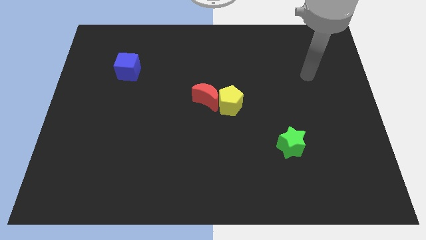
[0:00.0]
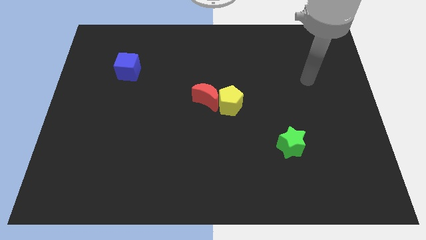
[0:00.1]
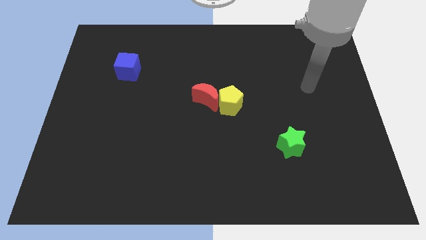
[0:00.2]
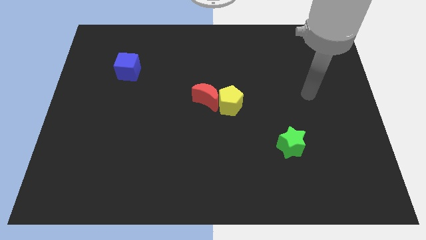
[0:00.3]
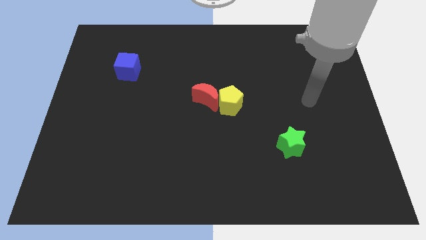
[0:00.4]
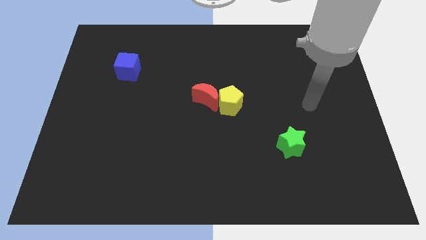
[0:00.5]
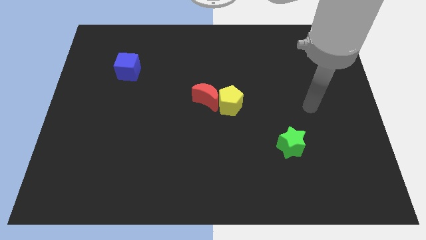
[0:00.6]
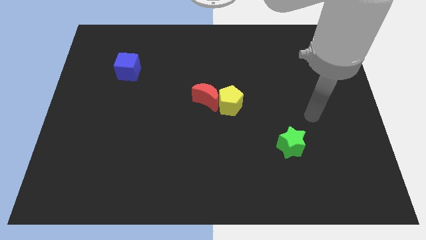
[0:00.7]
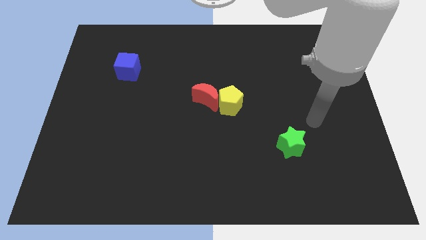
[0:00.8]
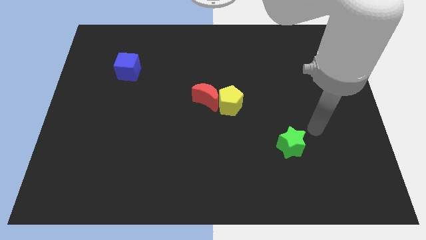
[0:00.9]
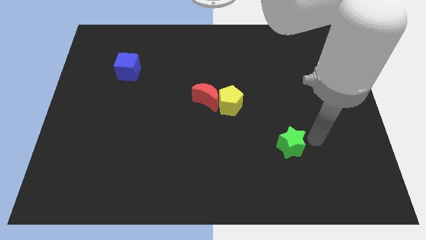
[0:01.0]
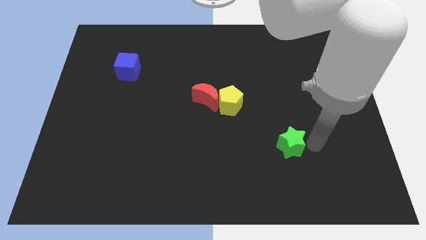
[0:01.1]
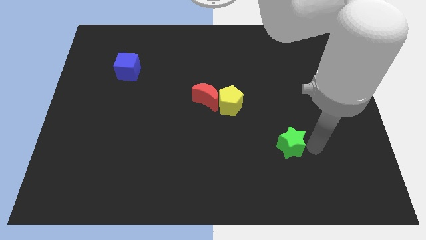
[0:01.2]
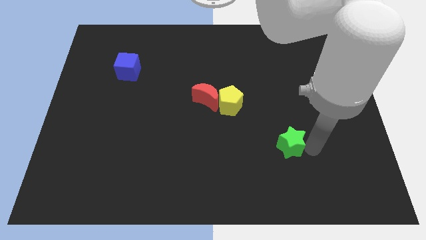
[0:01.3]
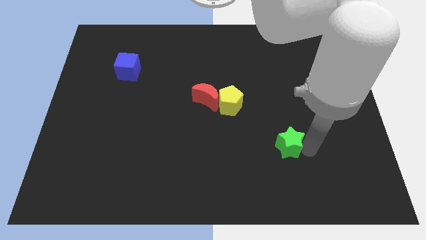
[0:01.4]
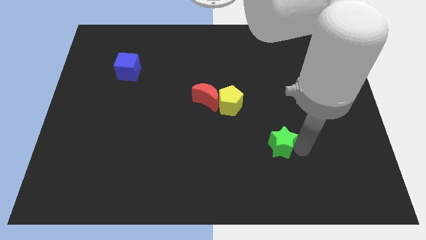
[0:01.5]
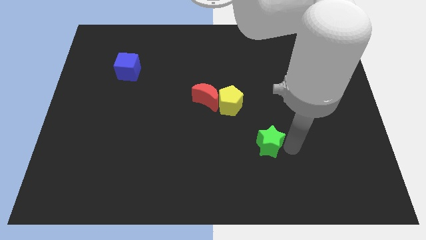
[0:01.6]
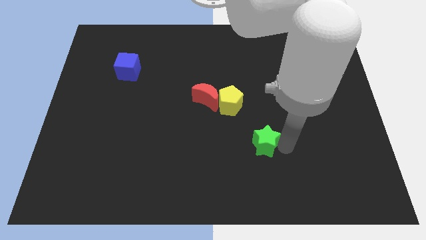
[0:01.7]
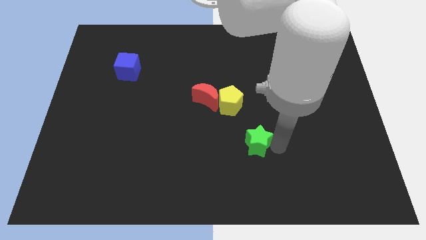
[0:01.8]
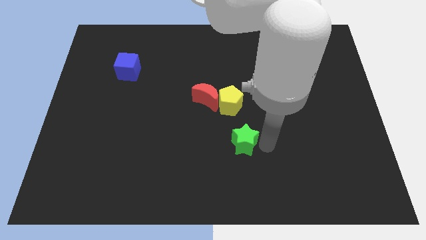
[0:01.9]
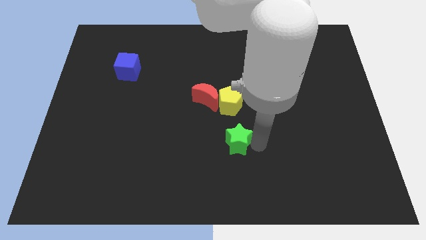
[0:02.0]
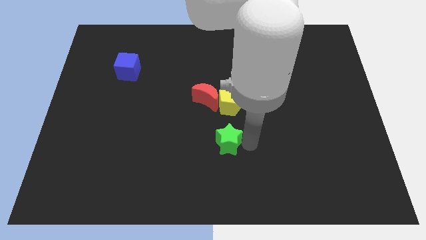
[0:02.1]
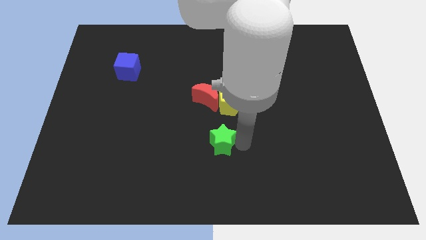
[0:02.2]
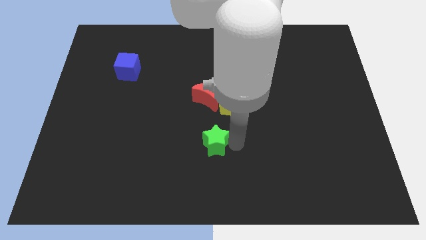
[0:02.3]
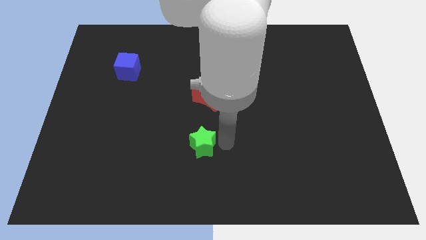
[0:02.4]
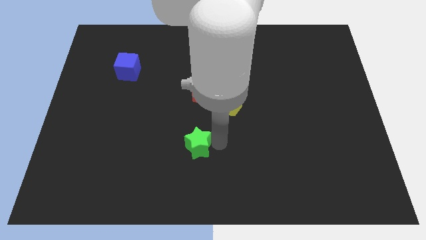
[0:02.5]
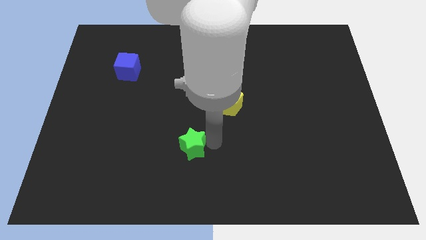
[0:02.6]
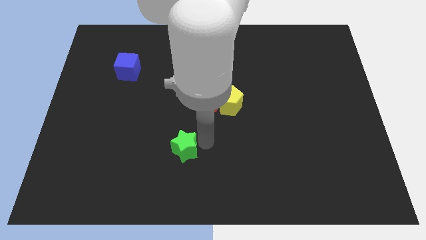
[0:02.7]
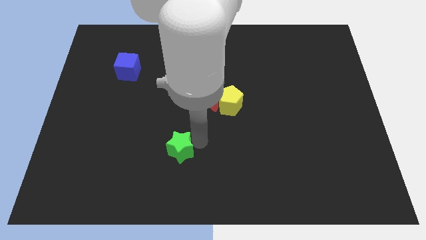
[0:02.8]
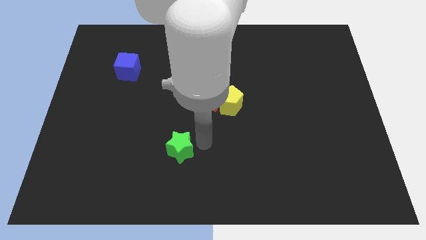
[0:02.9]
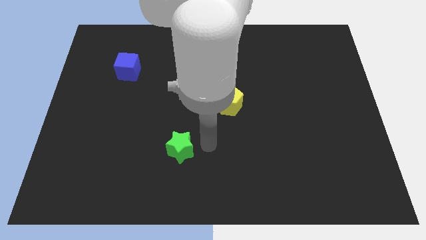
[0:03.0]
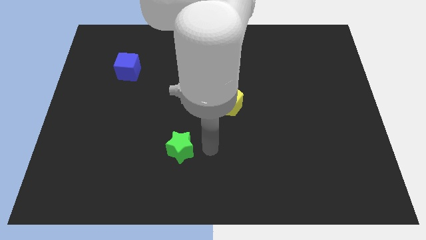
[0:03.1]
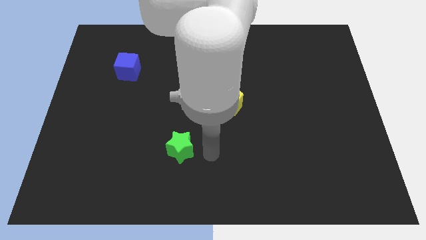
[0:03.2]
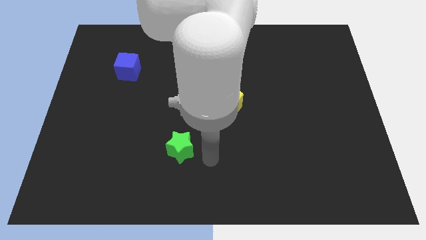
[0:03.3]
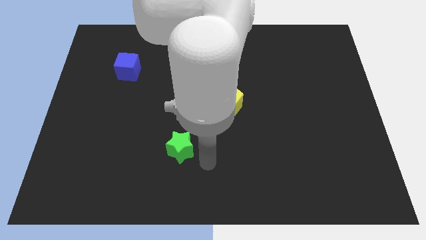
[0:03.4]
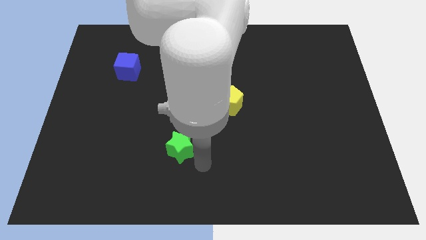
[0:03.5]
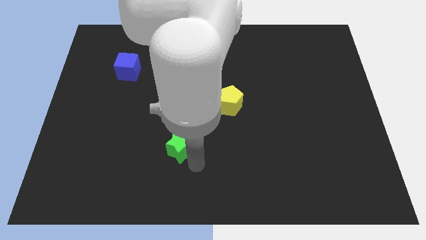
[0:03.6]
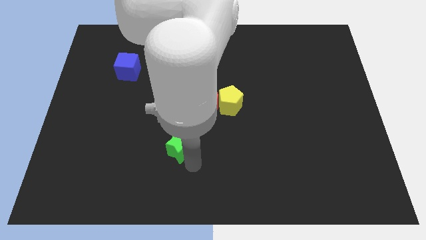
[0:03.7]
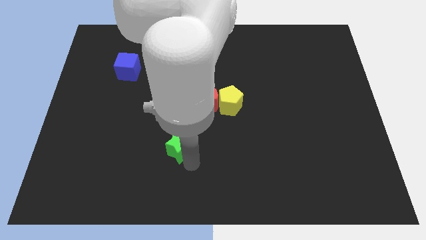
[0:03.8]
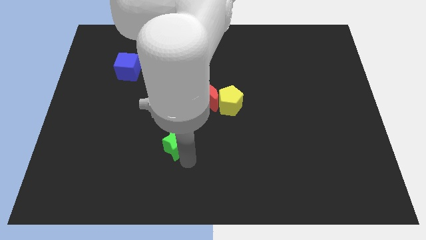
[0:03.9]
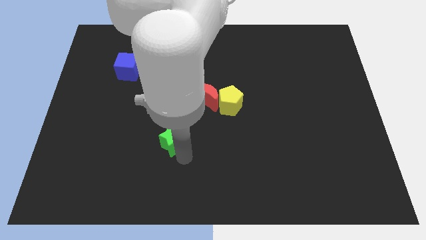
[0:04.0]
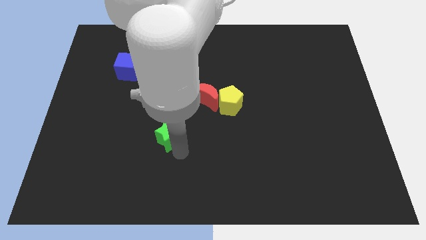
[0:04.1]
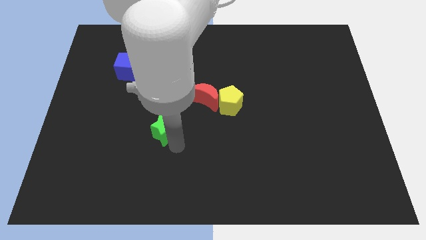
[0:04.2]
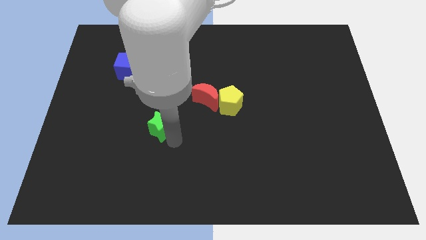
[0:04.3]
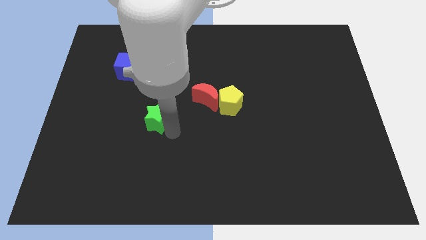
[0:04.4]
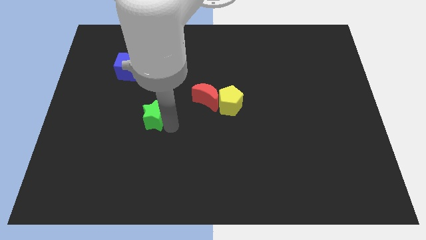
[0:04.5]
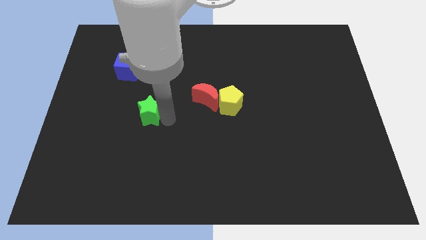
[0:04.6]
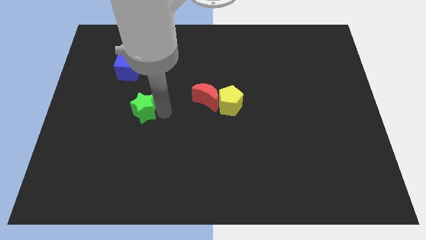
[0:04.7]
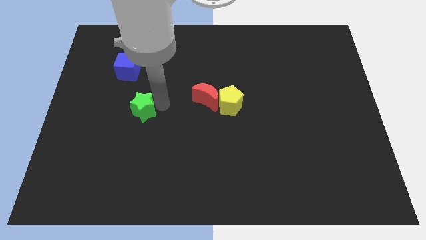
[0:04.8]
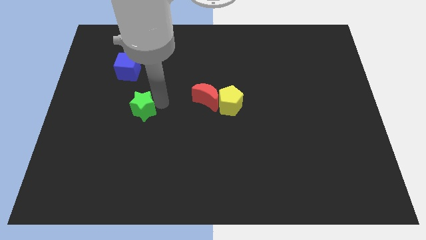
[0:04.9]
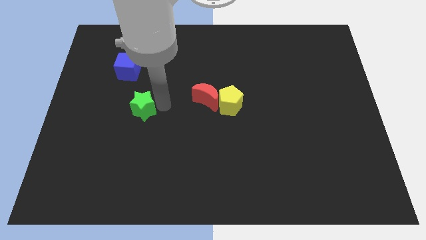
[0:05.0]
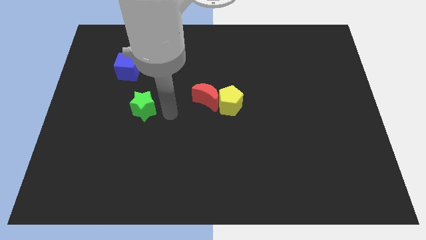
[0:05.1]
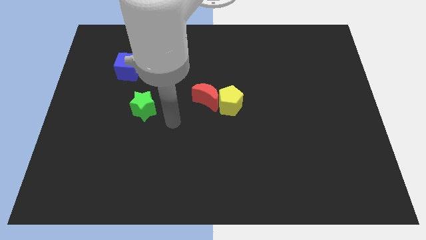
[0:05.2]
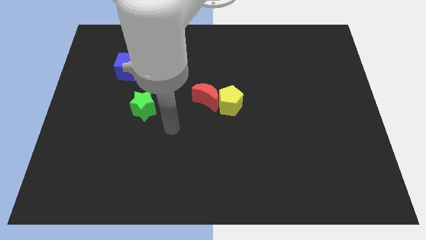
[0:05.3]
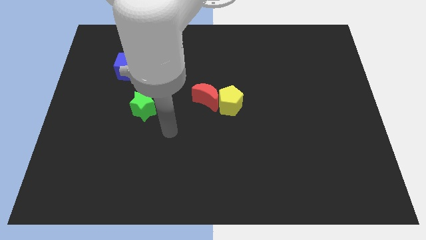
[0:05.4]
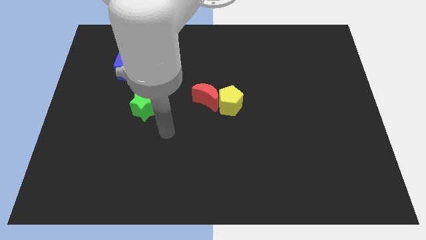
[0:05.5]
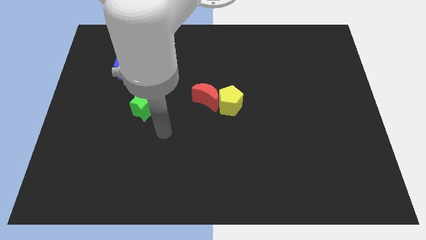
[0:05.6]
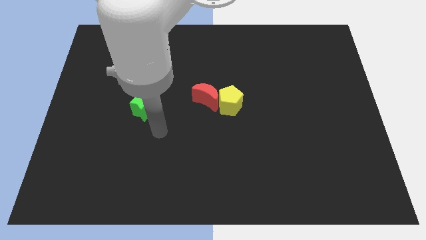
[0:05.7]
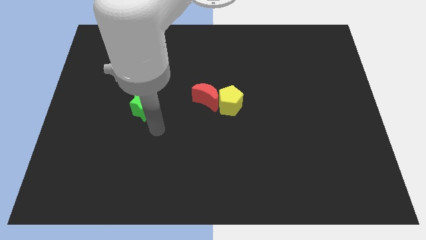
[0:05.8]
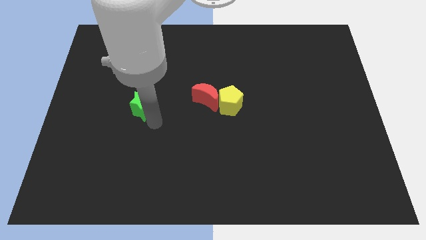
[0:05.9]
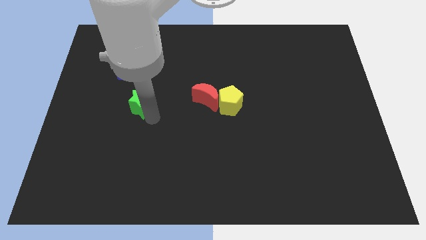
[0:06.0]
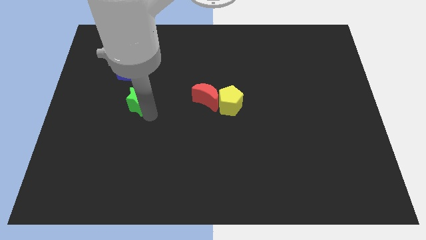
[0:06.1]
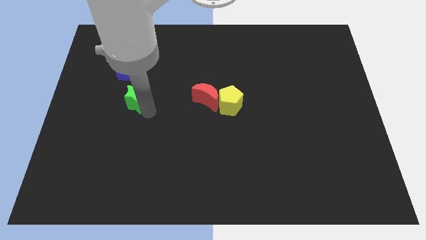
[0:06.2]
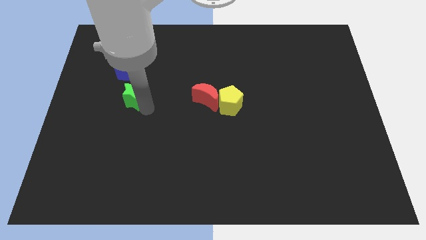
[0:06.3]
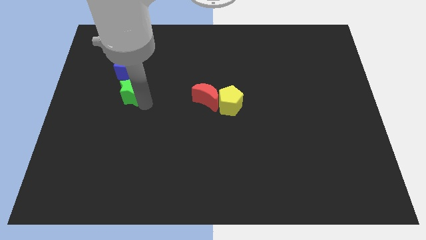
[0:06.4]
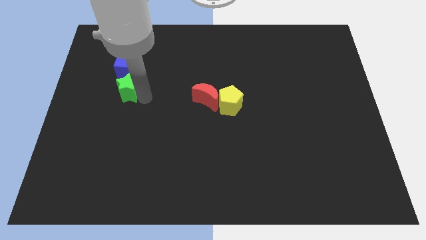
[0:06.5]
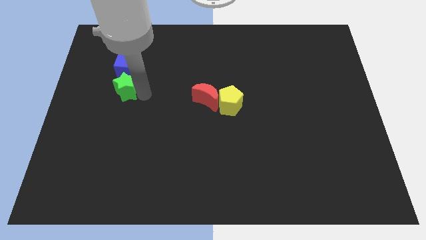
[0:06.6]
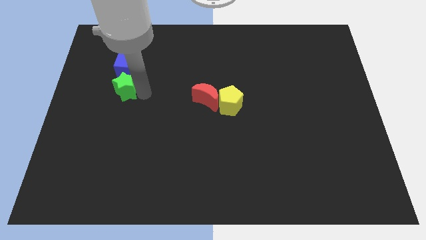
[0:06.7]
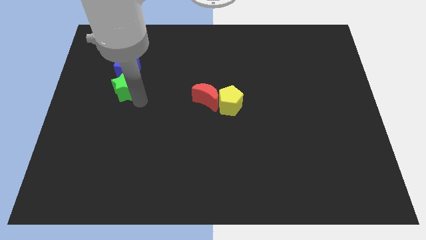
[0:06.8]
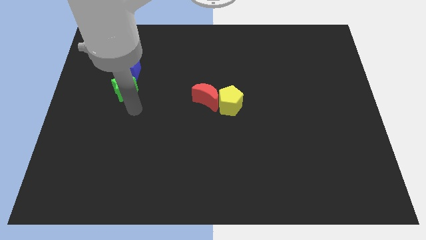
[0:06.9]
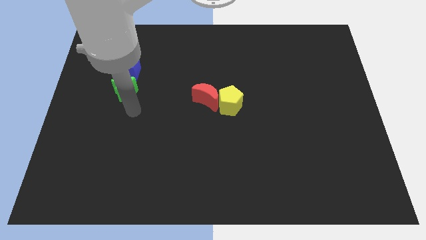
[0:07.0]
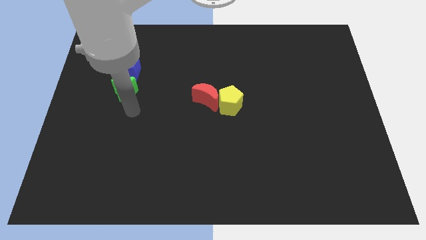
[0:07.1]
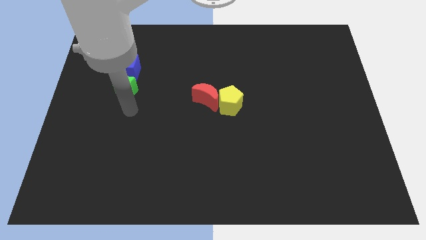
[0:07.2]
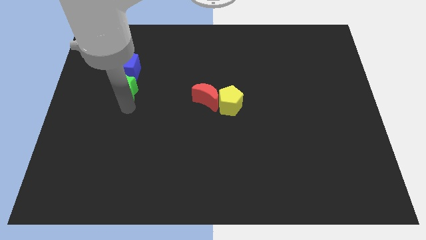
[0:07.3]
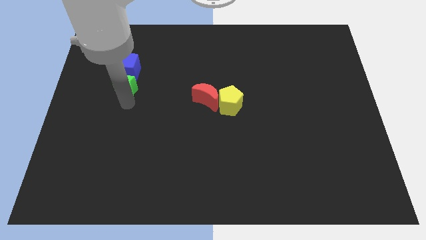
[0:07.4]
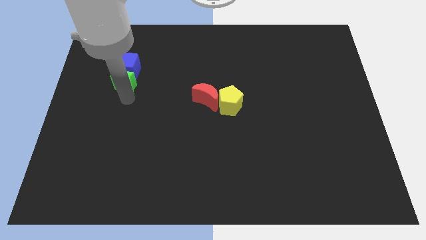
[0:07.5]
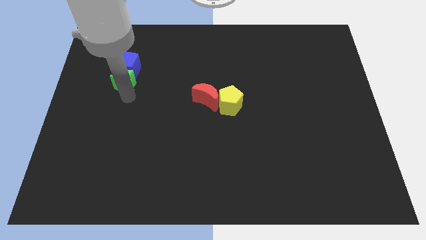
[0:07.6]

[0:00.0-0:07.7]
slide the green star towards the cube

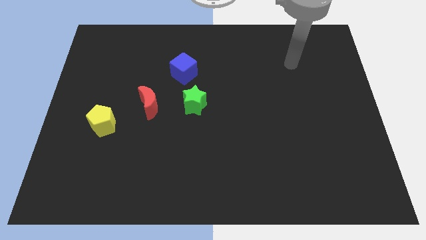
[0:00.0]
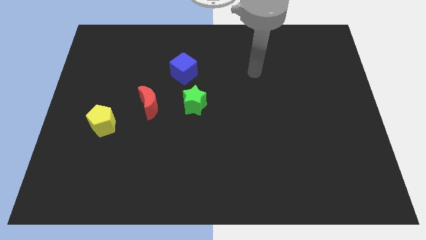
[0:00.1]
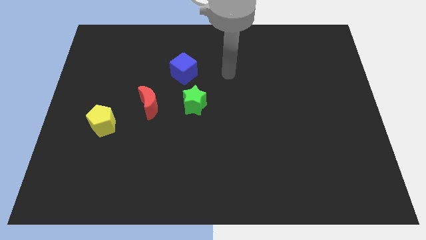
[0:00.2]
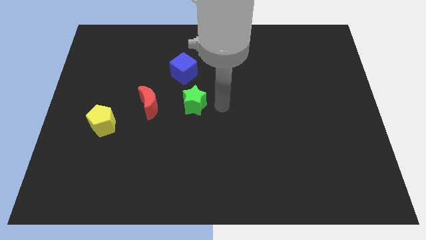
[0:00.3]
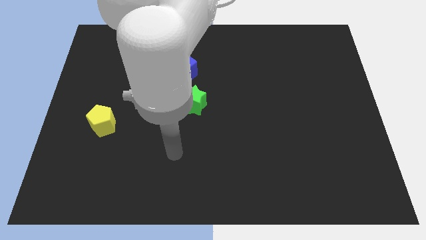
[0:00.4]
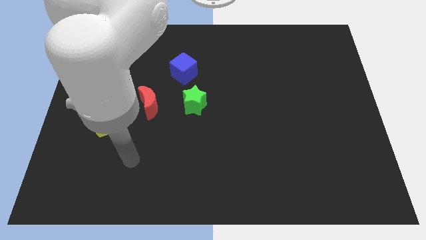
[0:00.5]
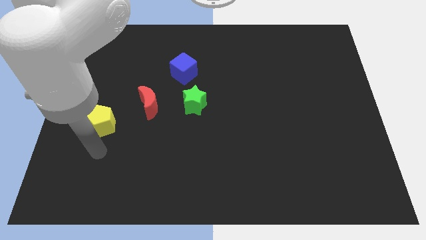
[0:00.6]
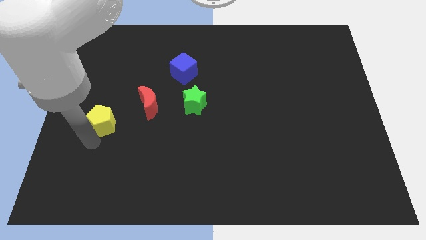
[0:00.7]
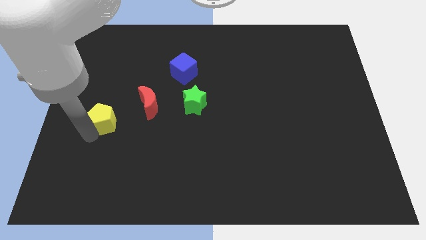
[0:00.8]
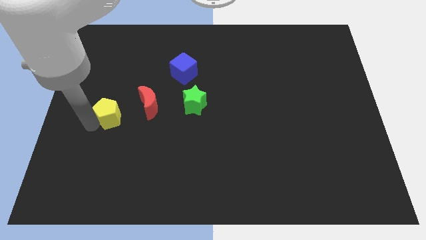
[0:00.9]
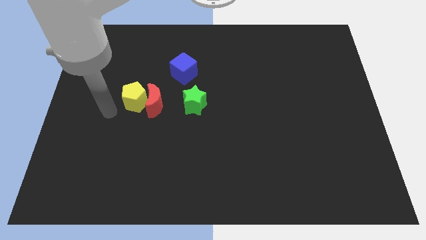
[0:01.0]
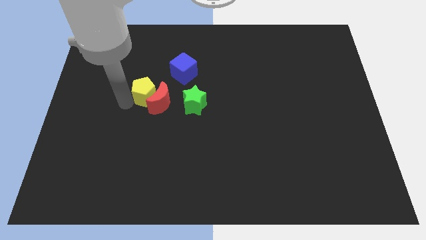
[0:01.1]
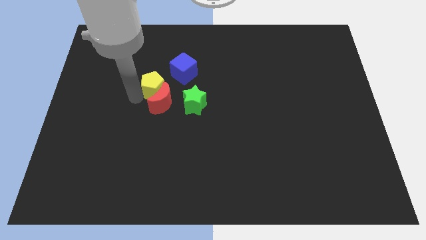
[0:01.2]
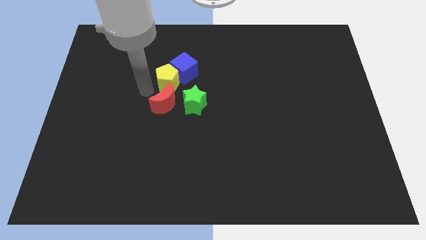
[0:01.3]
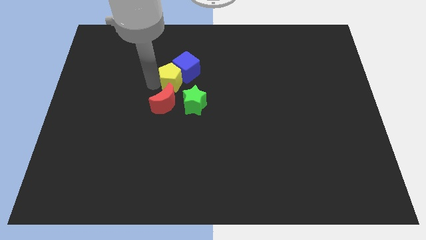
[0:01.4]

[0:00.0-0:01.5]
put the pentagon next to the blue block
